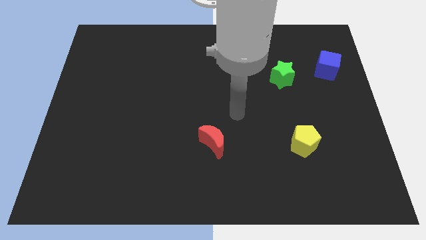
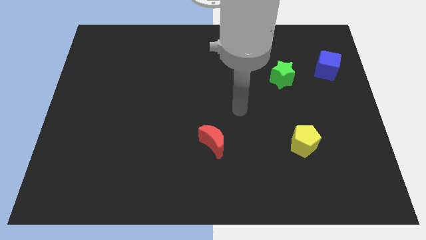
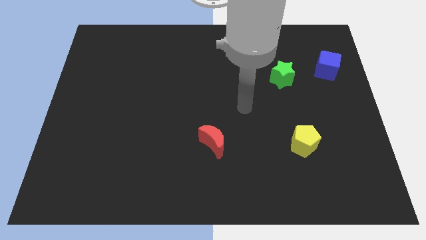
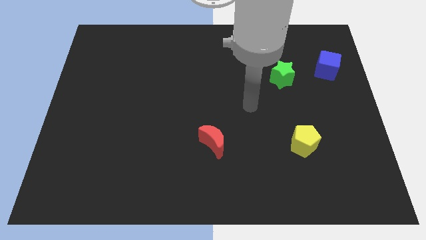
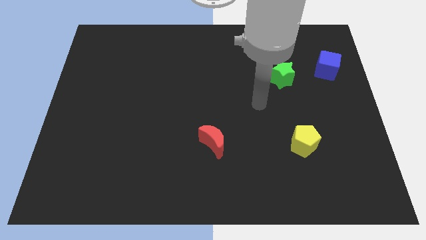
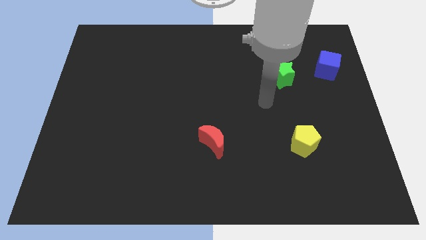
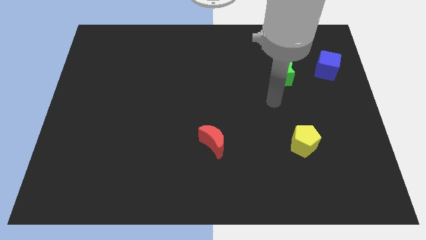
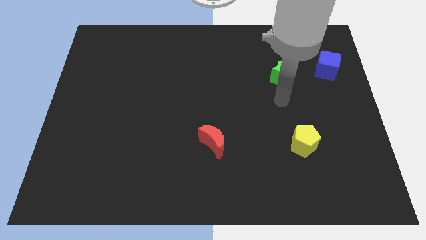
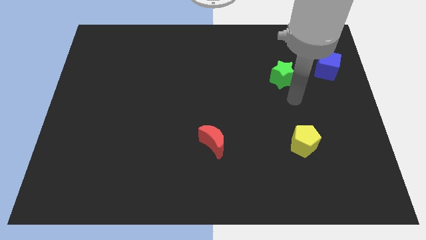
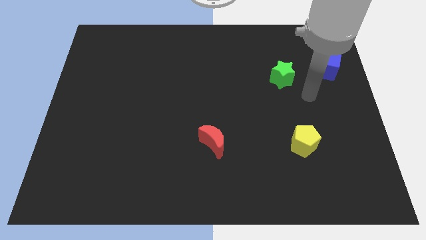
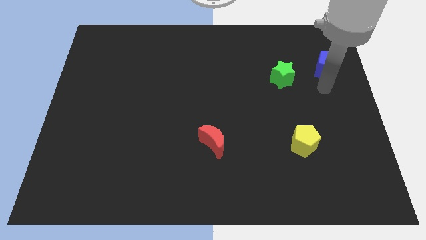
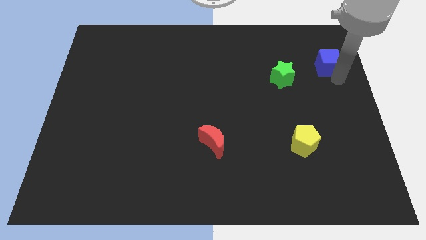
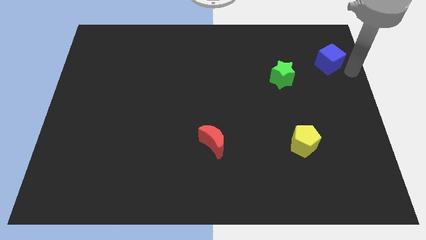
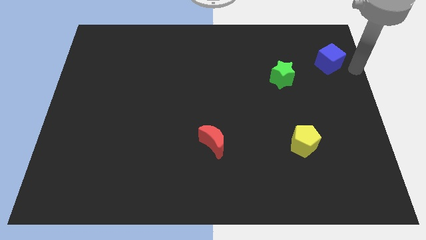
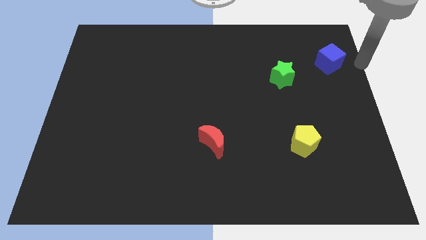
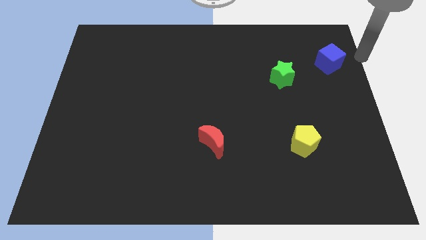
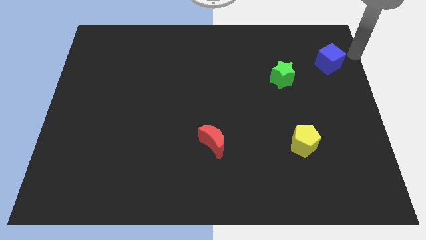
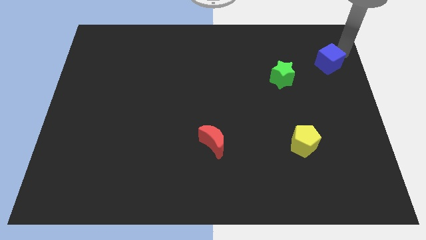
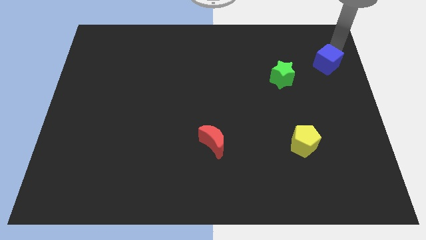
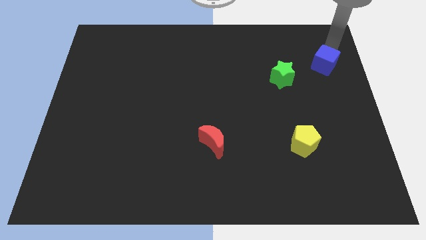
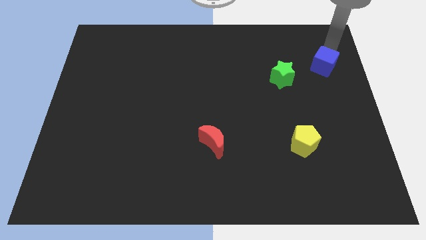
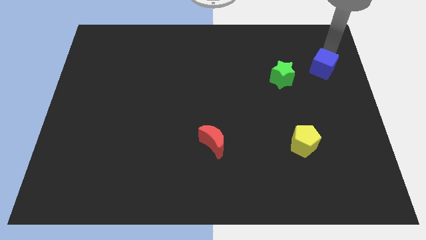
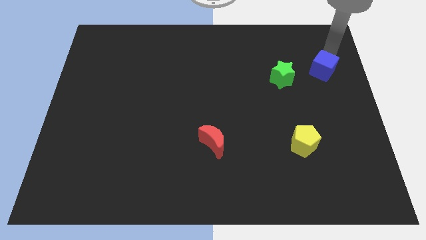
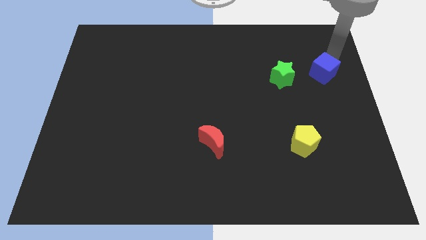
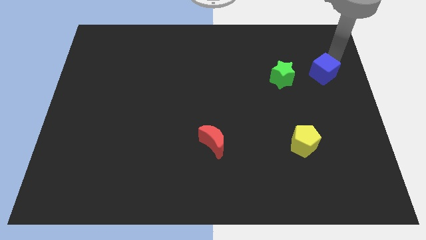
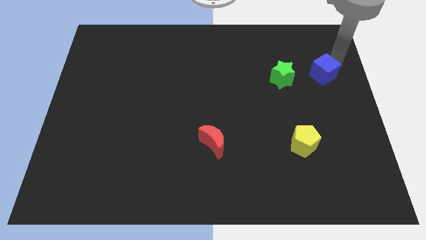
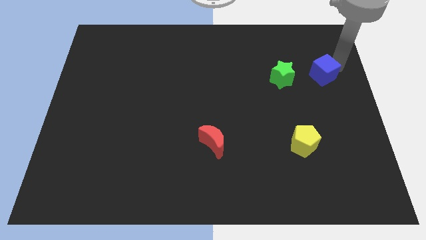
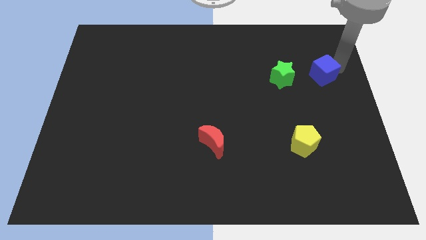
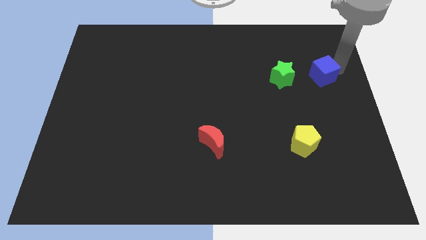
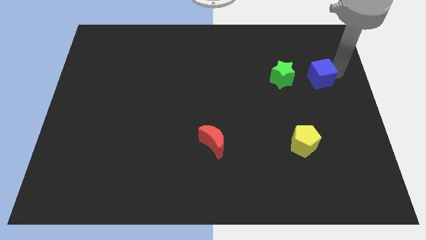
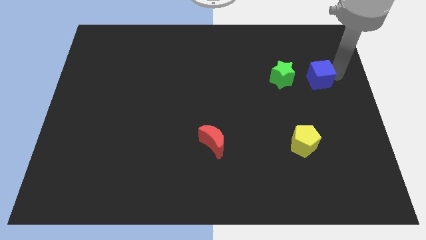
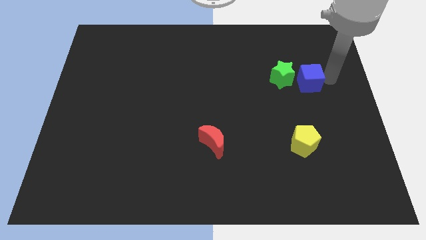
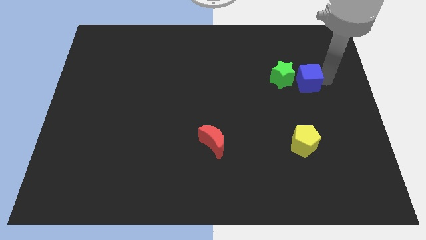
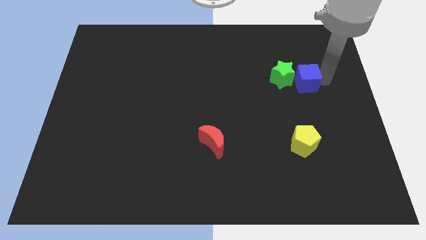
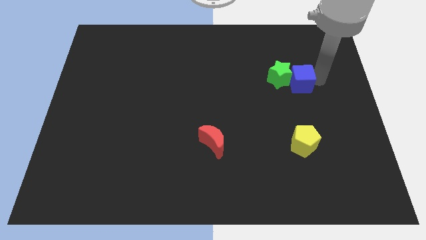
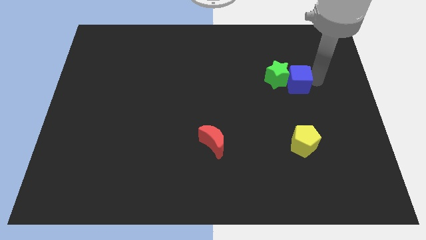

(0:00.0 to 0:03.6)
push the blue cube next to the green star

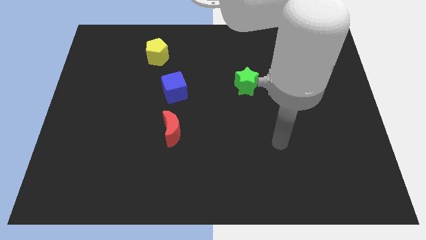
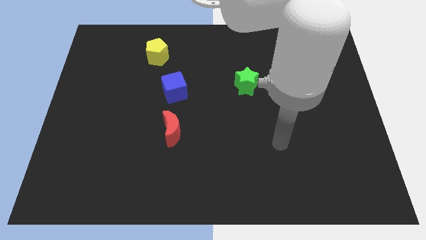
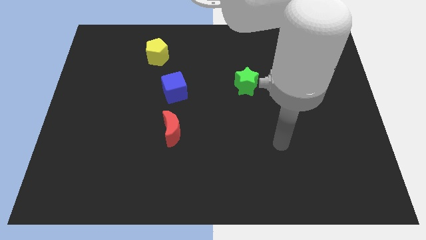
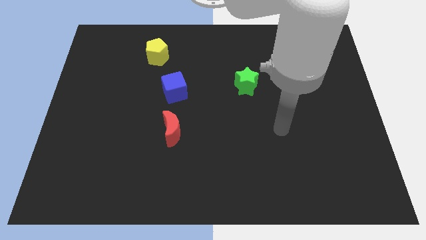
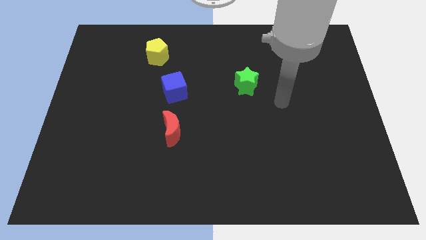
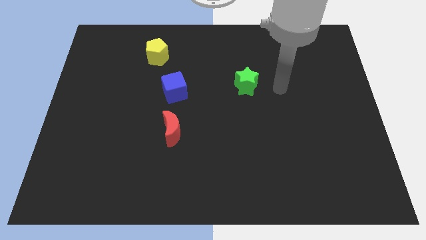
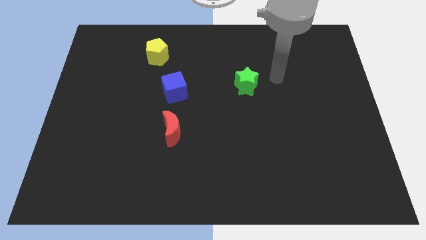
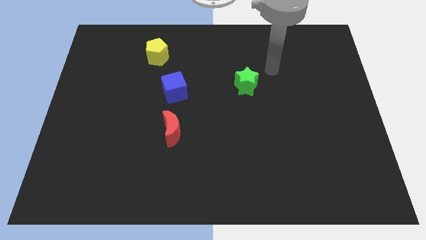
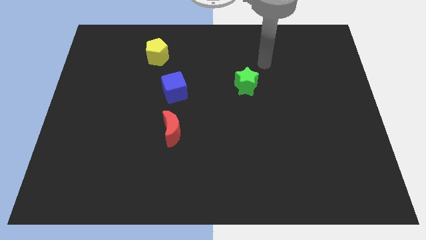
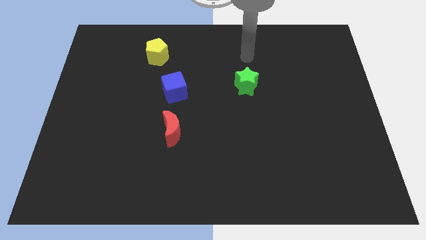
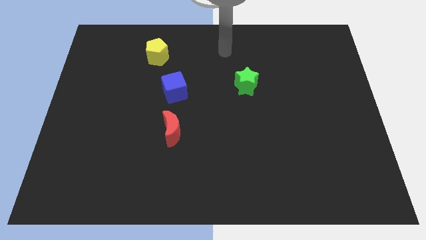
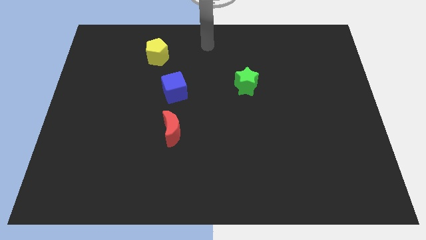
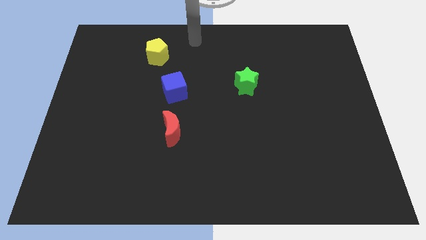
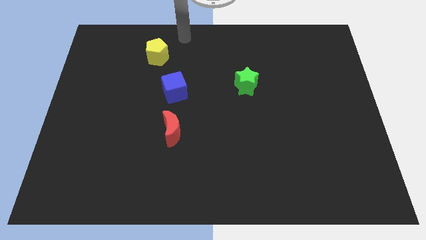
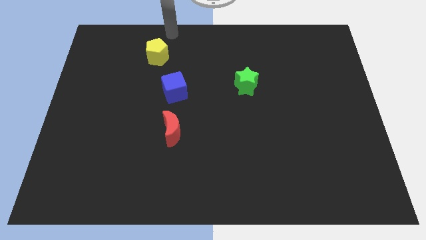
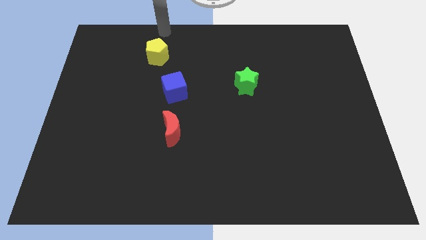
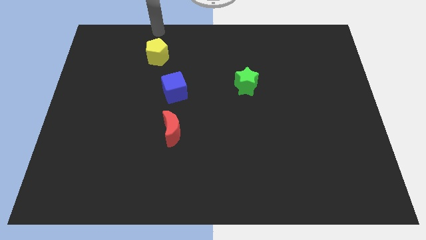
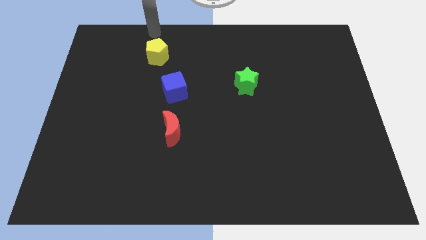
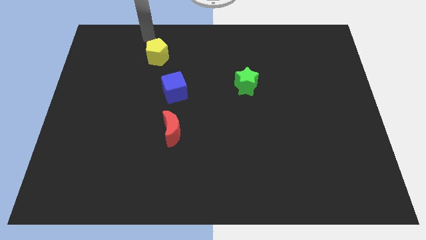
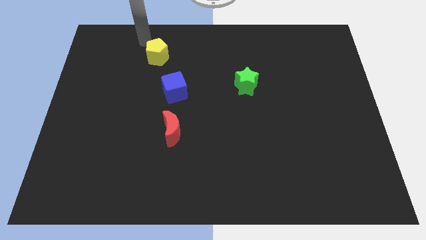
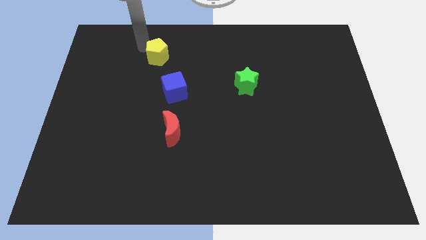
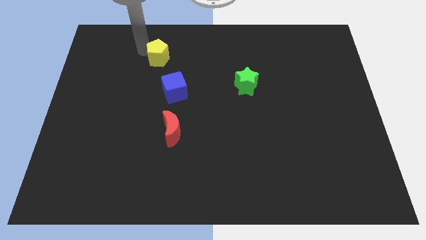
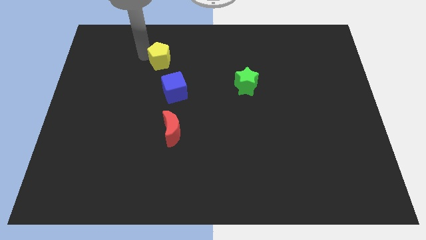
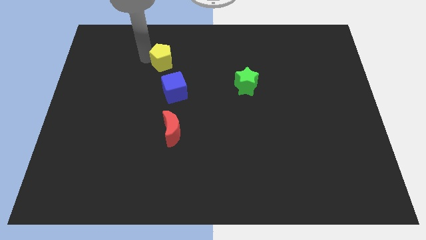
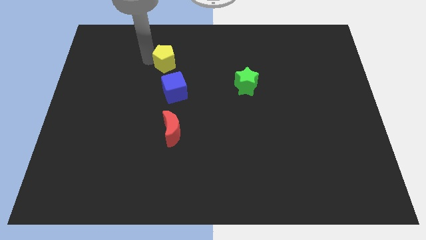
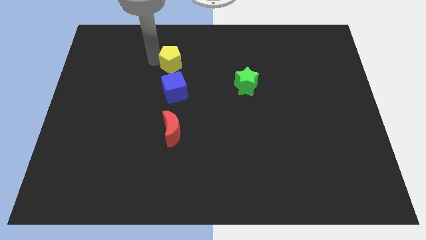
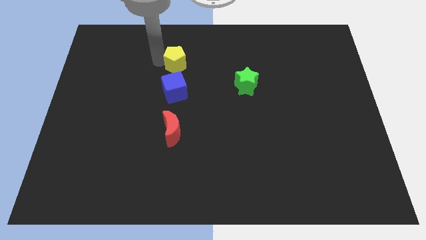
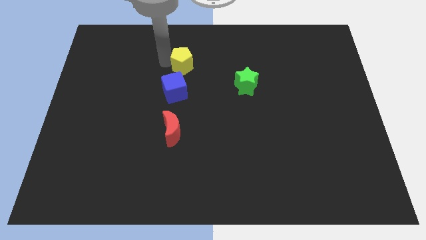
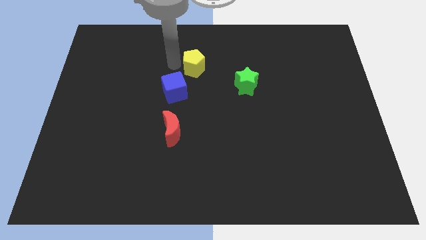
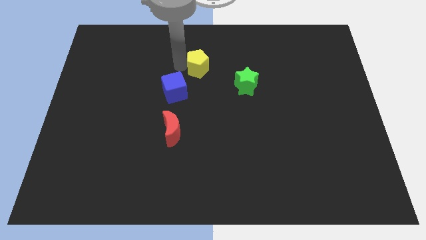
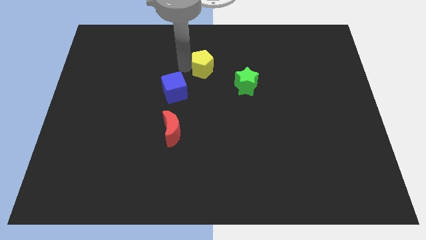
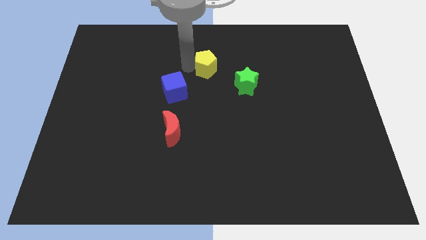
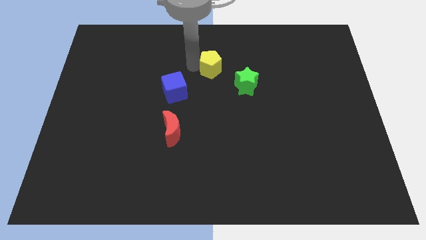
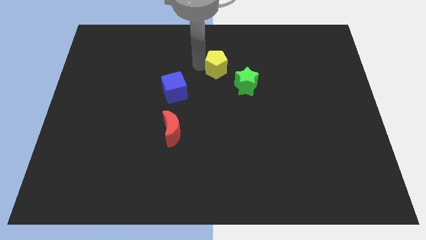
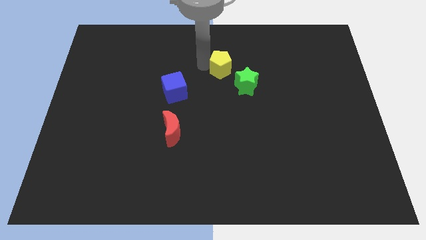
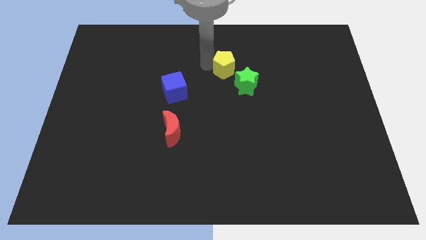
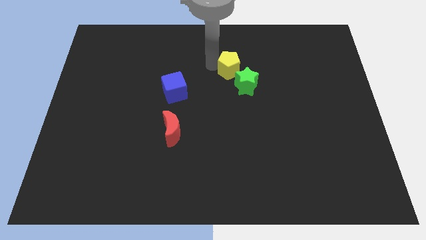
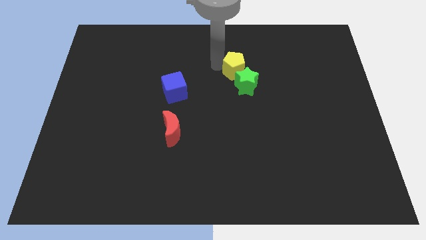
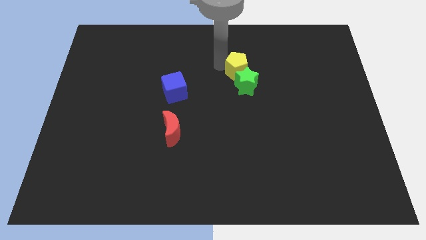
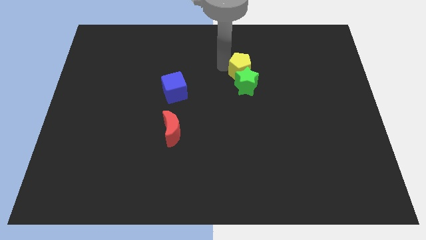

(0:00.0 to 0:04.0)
put the yellow pentagon towards the green star

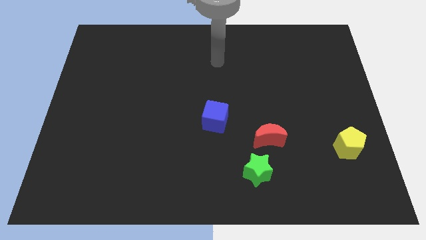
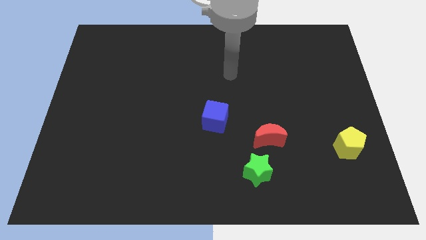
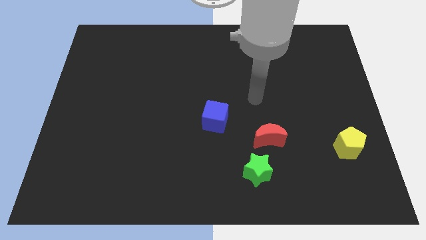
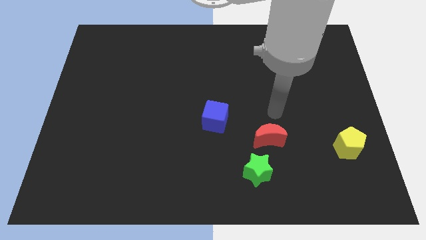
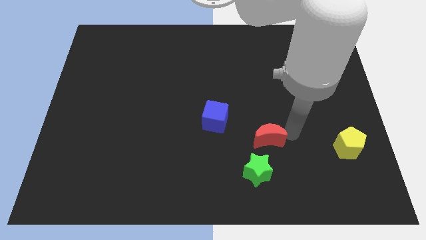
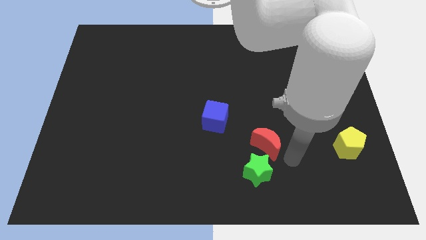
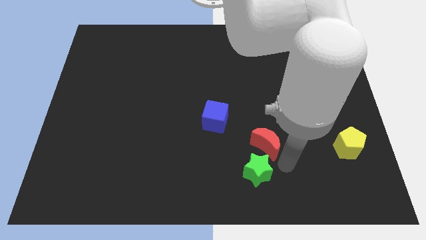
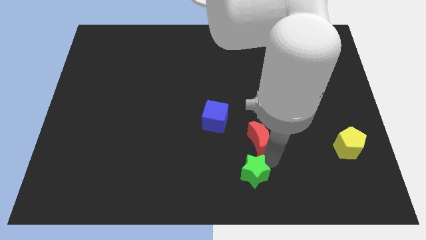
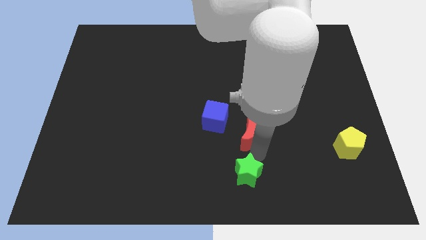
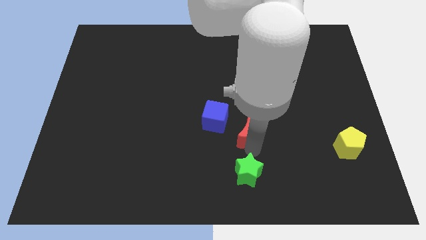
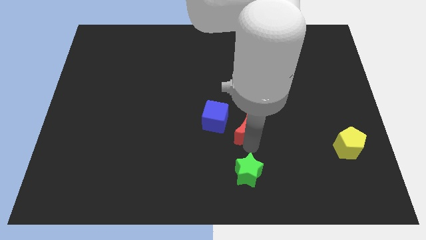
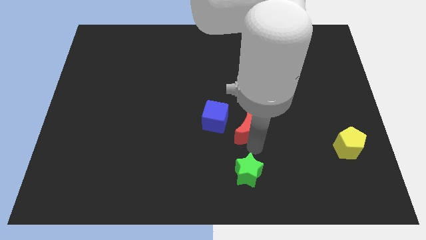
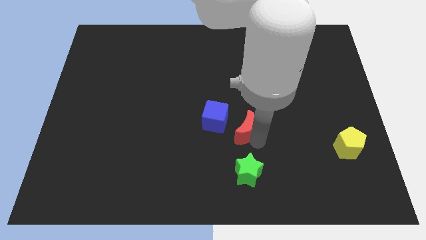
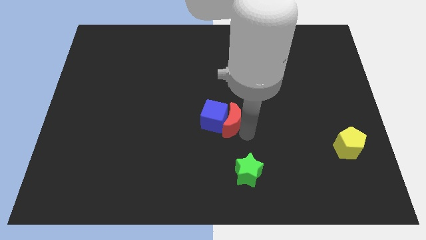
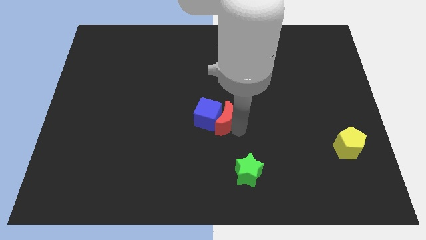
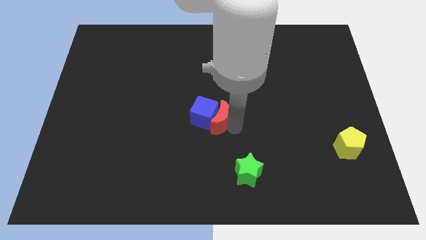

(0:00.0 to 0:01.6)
move the red block towards the cube
